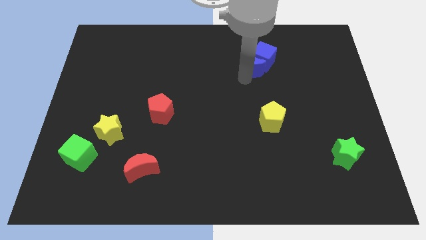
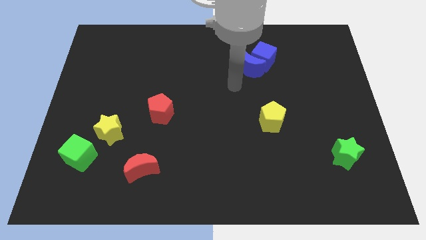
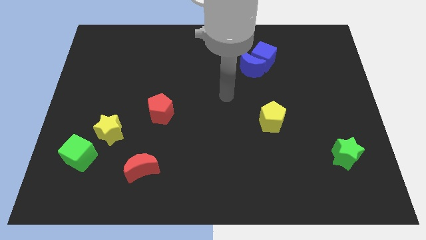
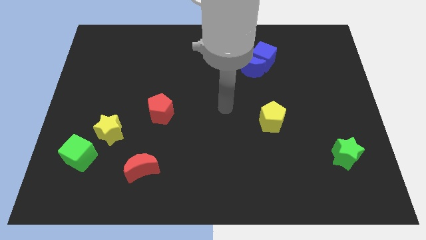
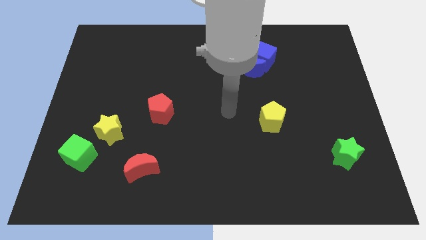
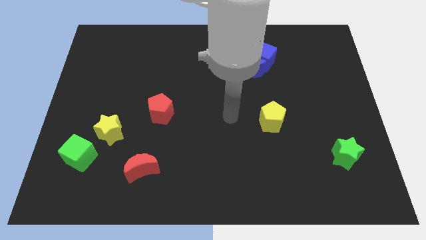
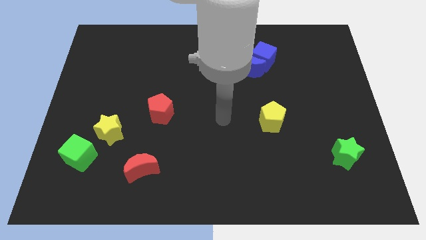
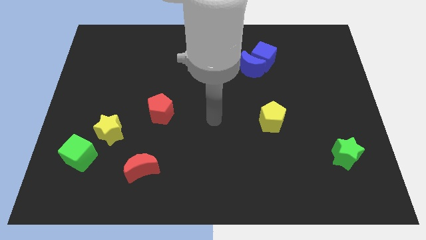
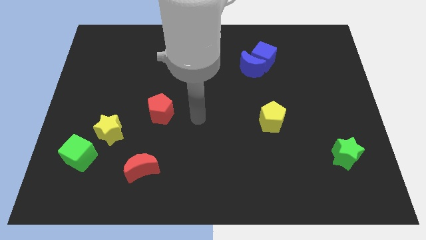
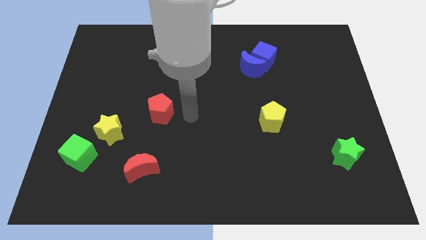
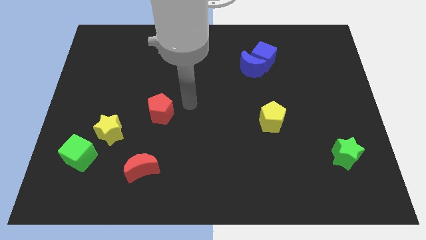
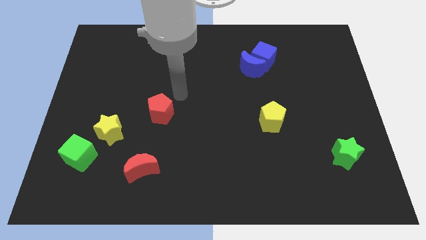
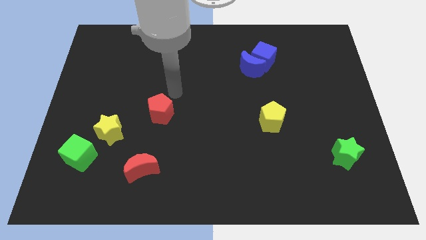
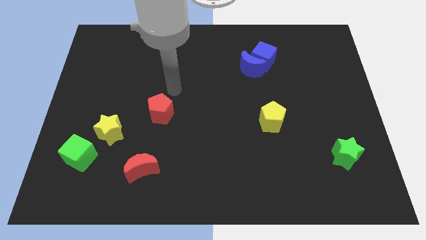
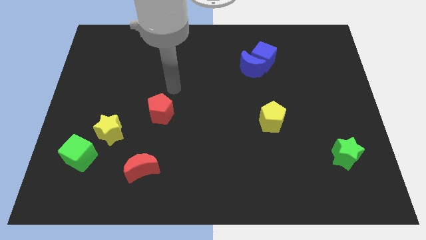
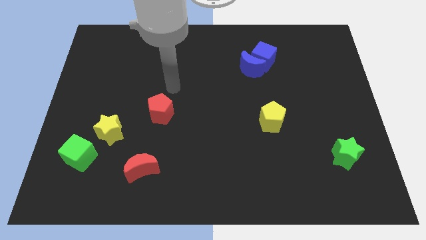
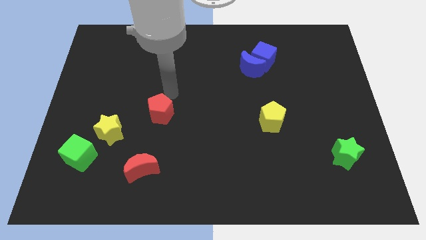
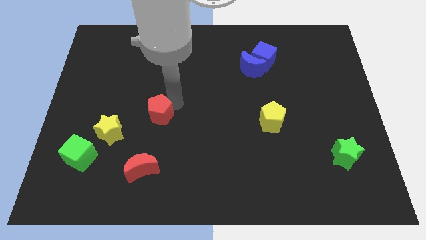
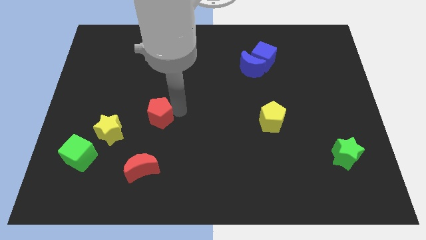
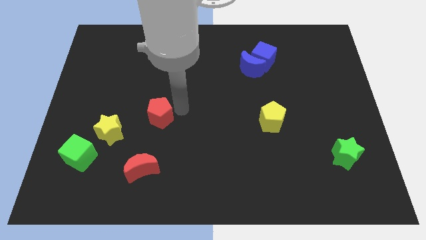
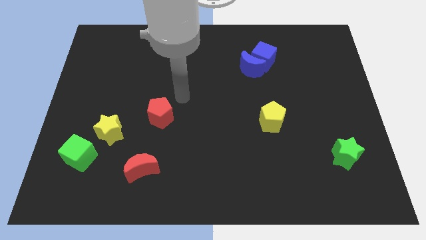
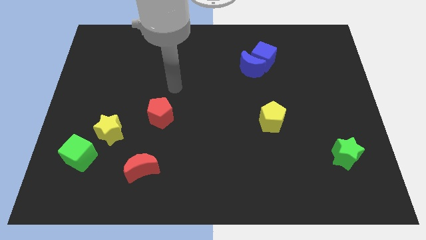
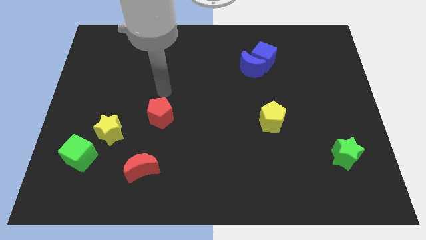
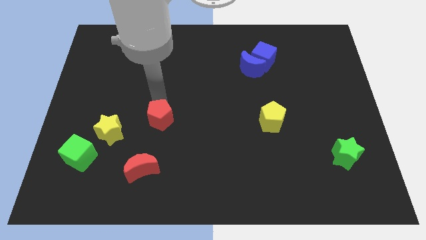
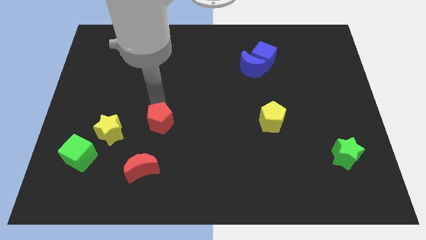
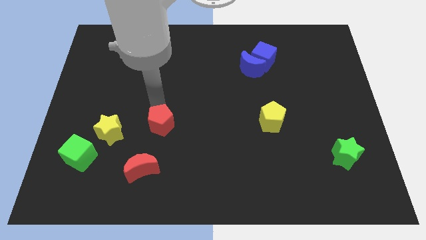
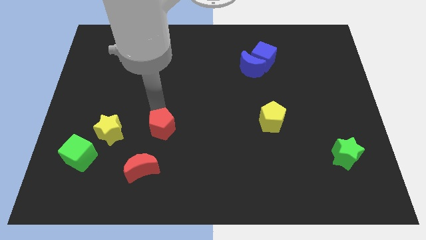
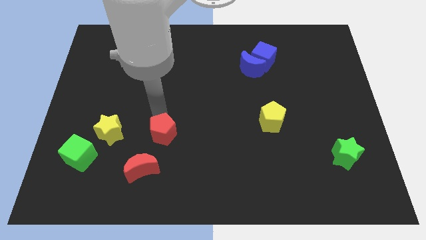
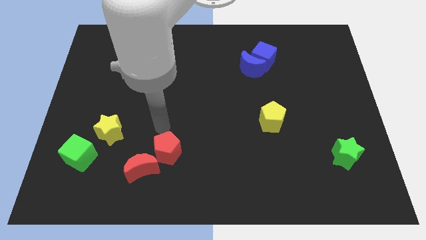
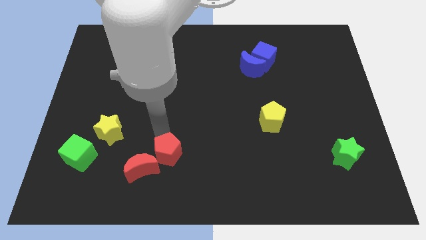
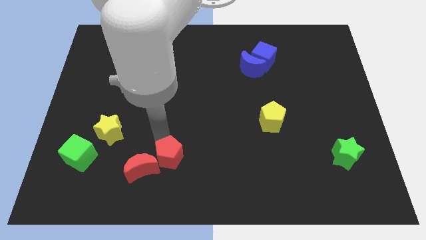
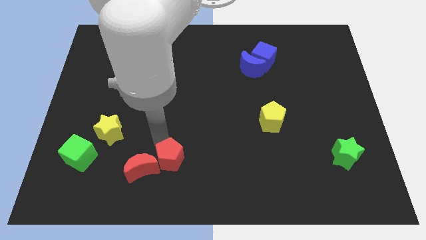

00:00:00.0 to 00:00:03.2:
push the red pentagon towards the bottom center of the board

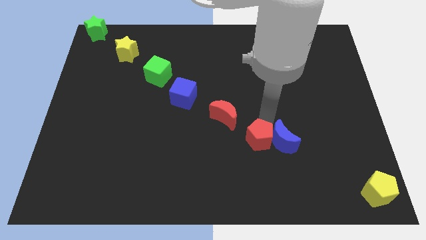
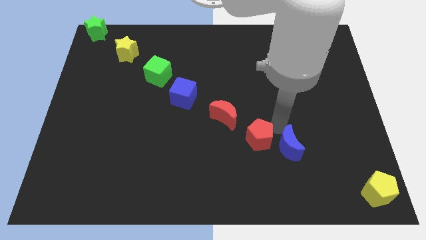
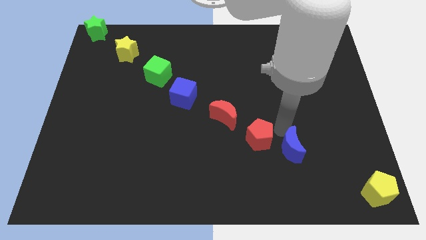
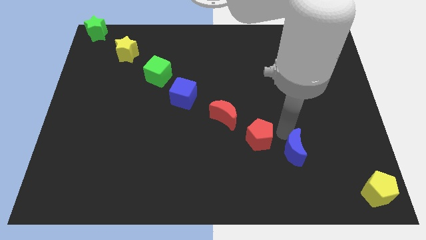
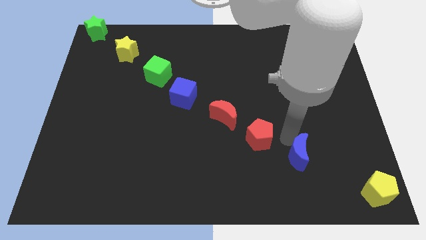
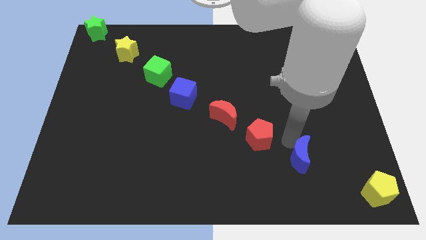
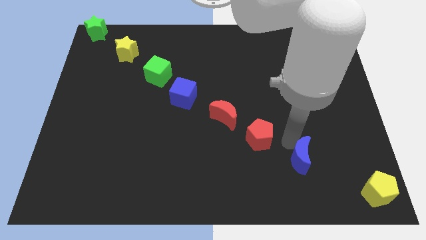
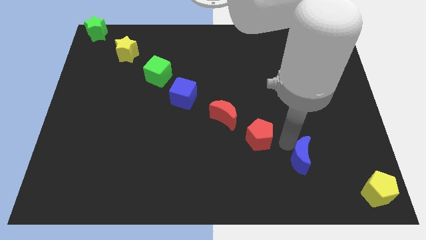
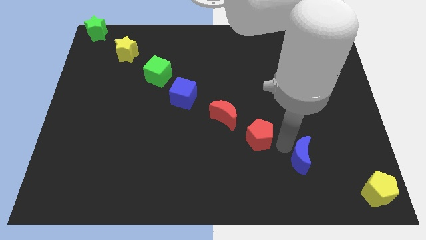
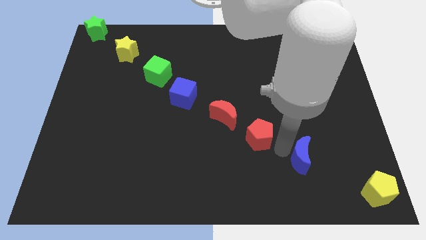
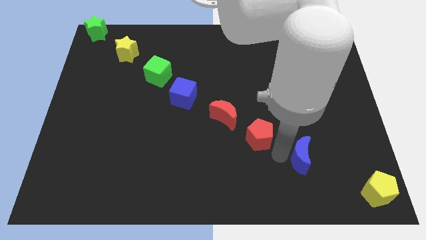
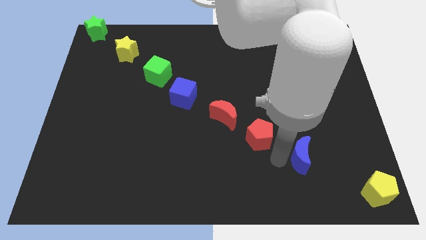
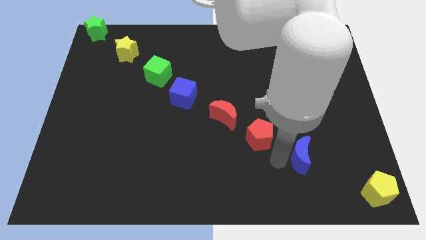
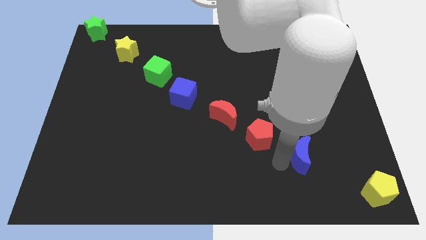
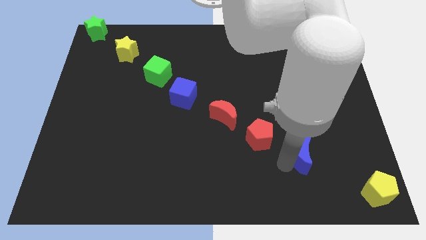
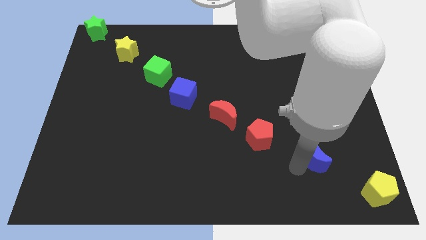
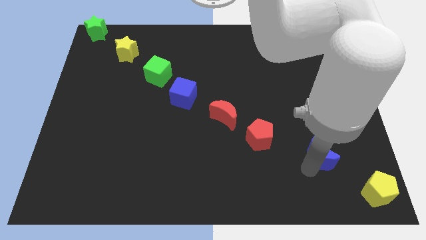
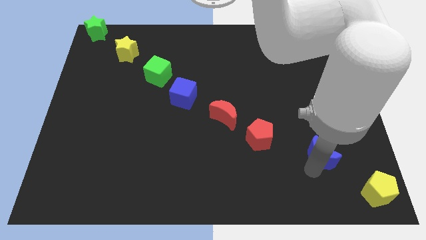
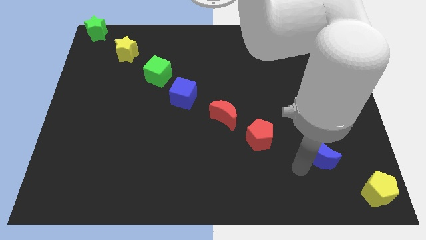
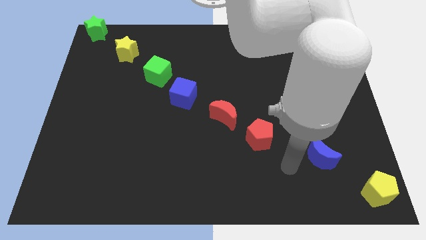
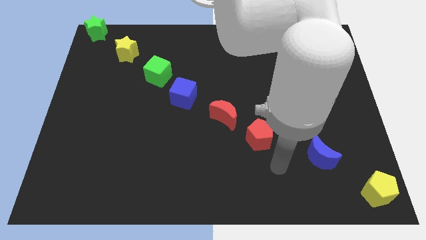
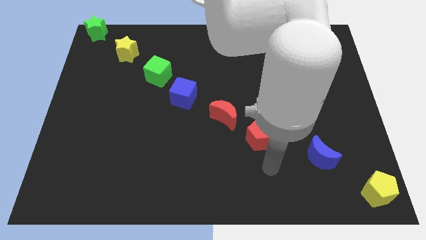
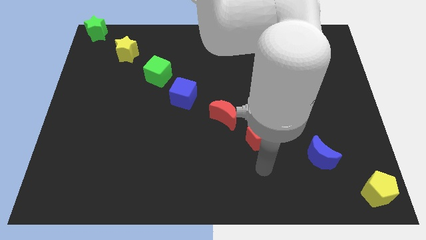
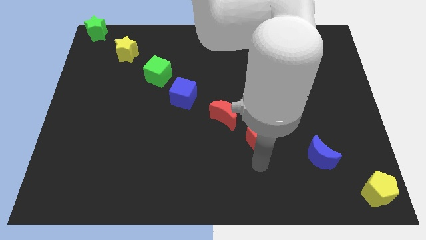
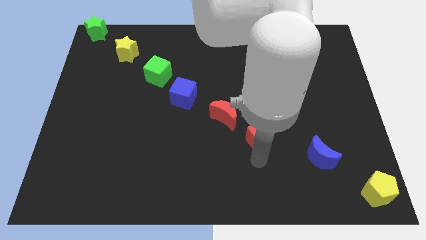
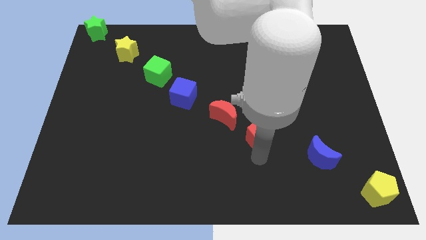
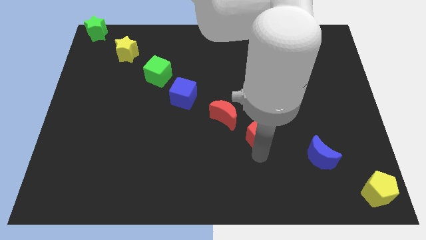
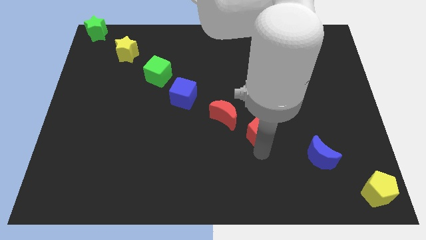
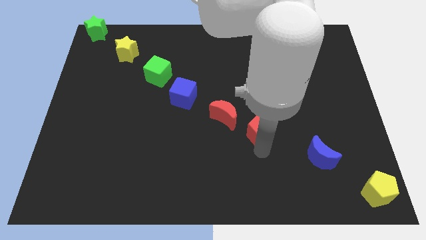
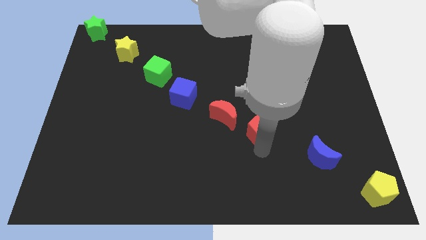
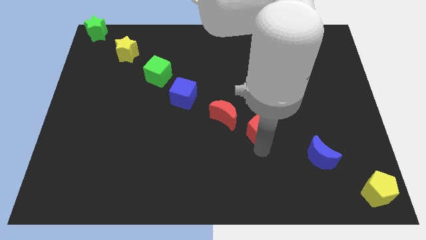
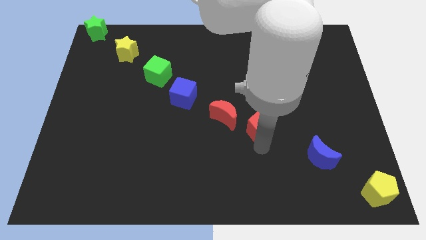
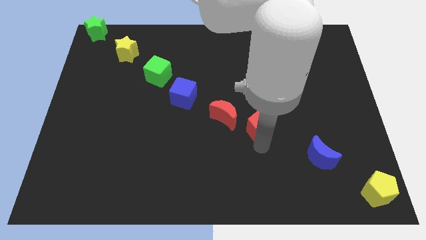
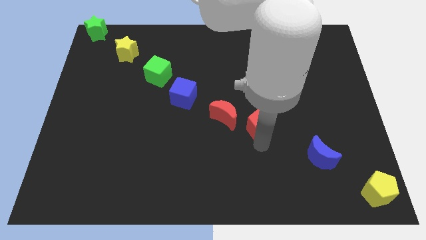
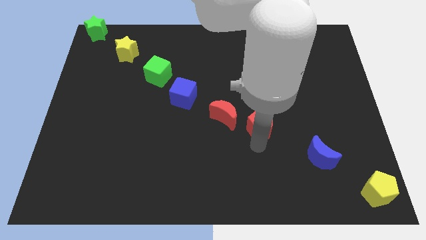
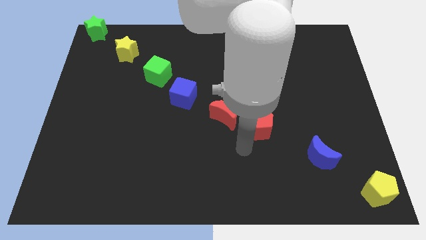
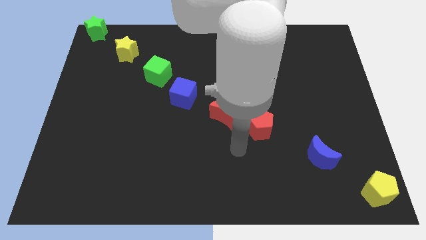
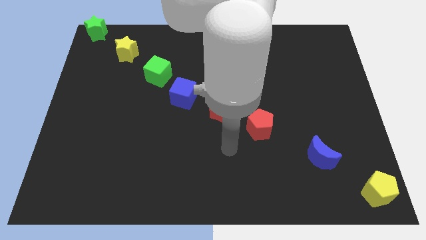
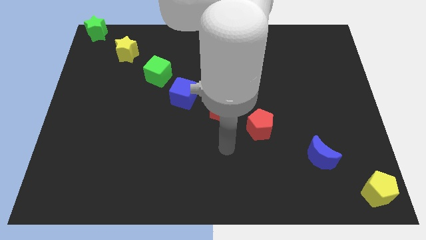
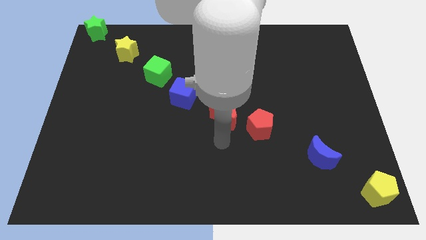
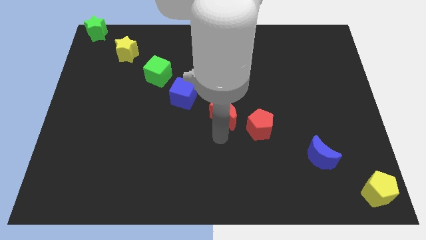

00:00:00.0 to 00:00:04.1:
separate the blue crescent and red pentagon

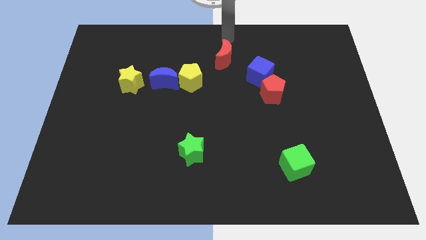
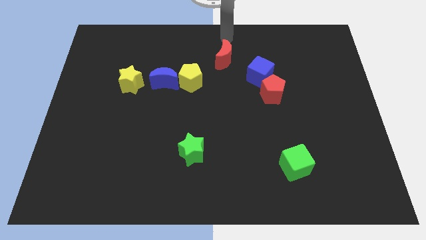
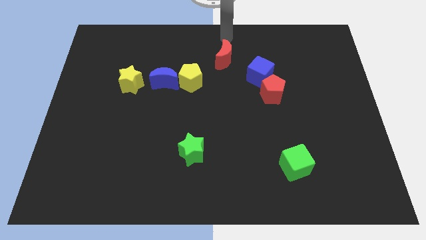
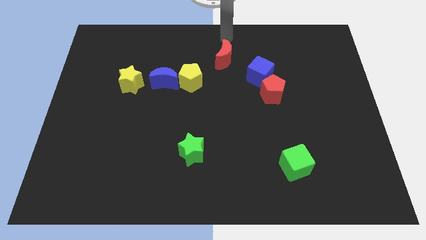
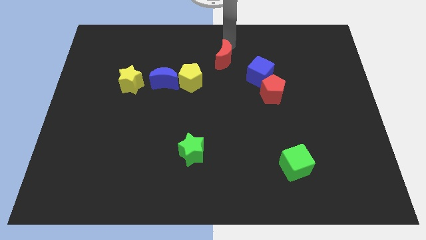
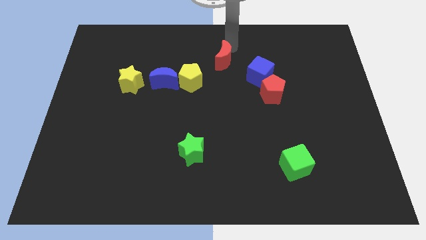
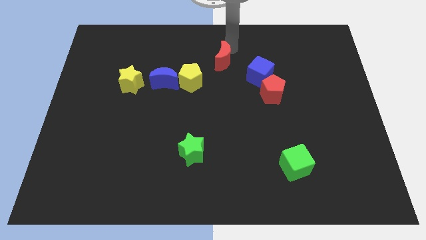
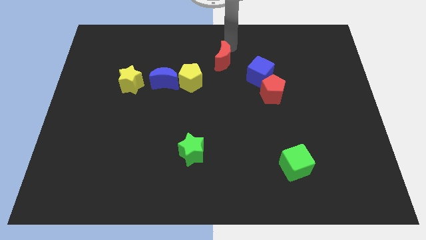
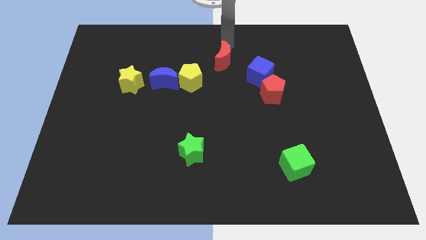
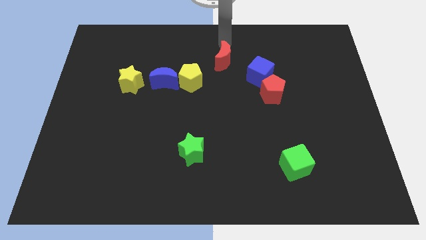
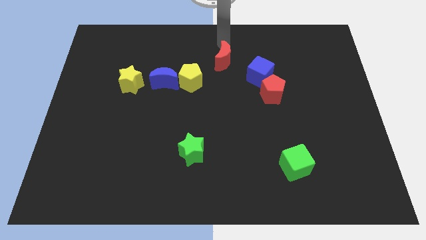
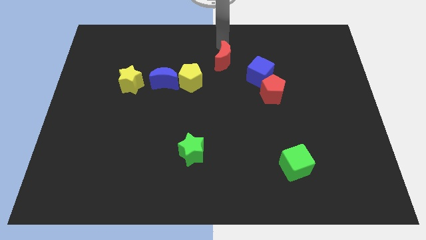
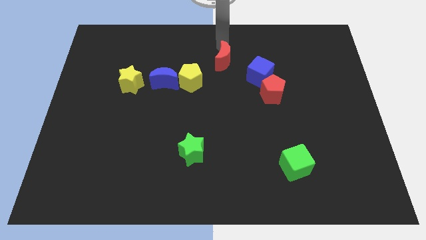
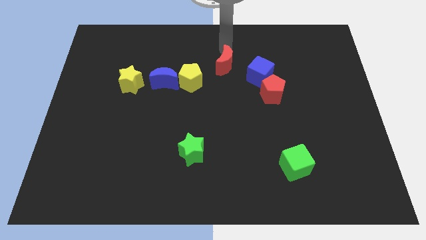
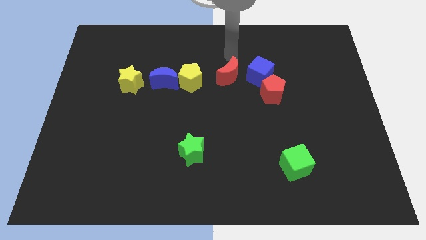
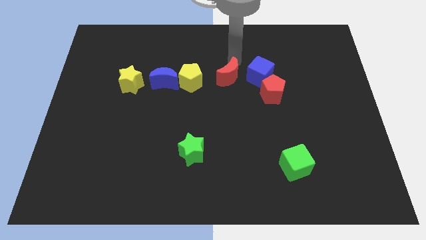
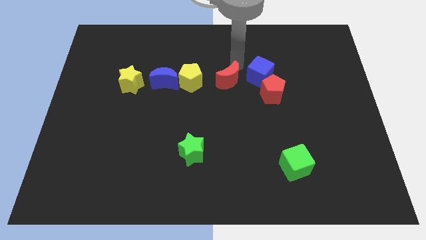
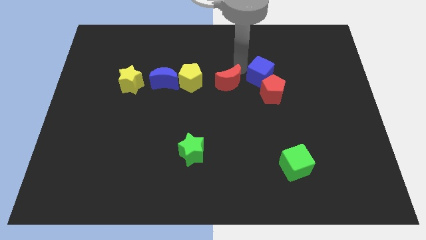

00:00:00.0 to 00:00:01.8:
push the red crescent towards the left of yellow pentagon
